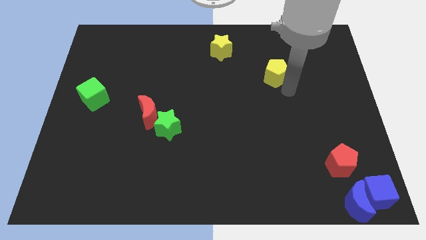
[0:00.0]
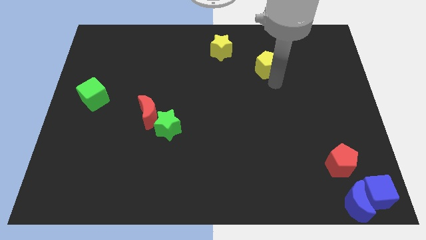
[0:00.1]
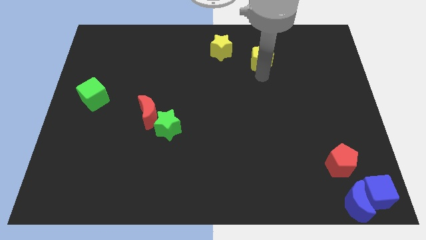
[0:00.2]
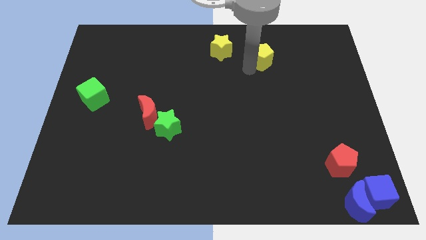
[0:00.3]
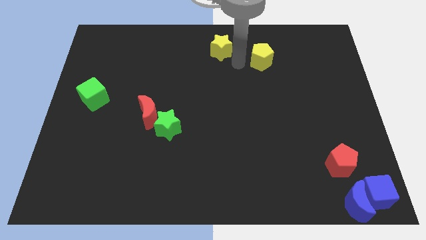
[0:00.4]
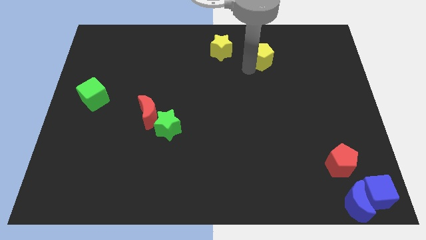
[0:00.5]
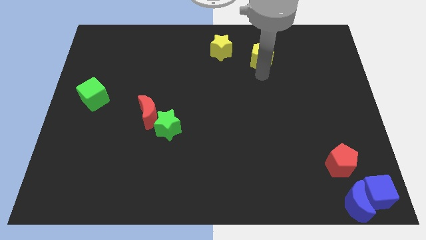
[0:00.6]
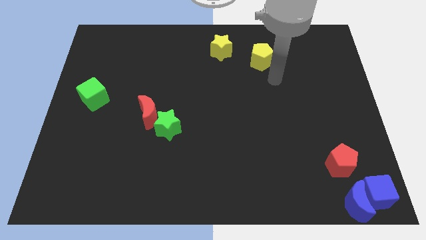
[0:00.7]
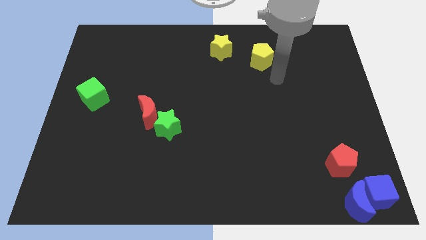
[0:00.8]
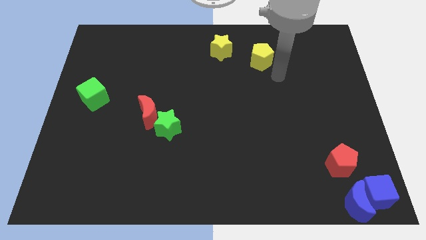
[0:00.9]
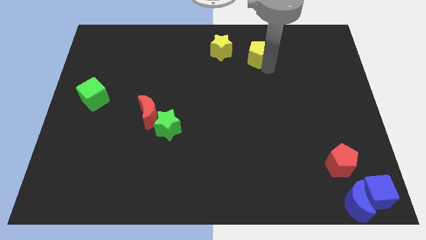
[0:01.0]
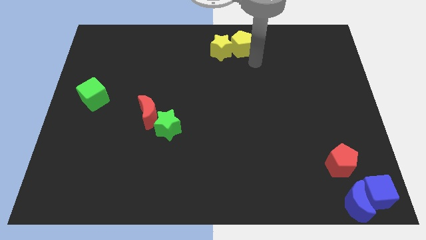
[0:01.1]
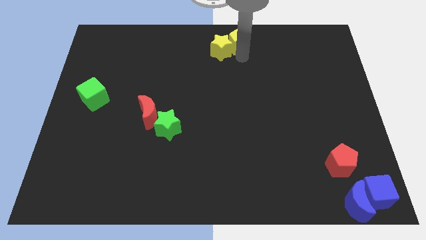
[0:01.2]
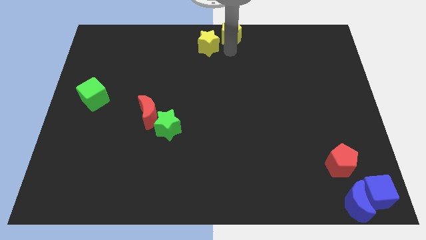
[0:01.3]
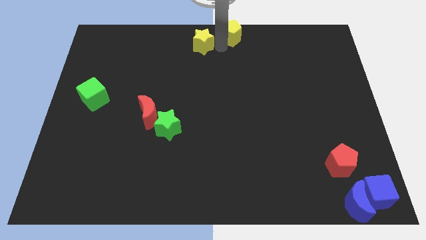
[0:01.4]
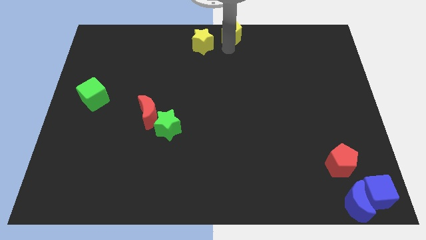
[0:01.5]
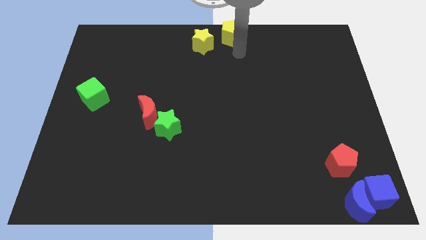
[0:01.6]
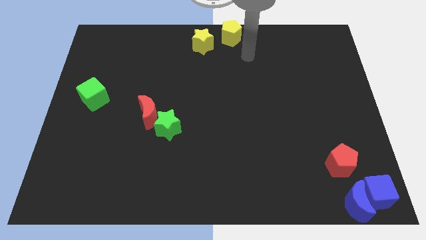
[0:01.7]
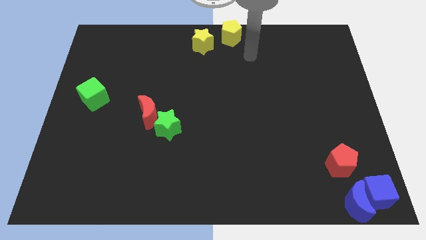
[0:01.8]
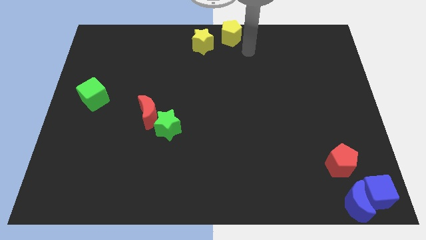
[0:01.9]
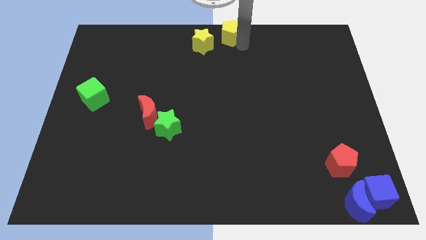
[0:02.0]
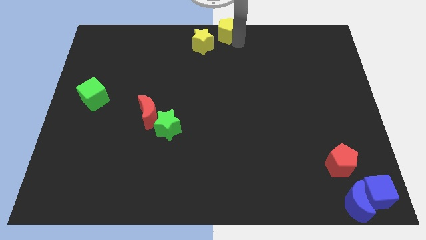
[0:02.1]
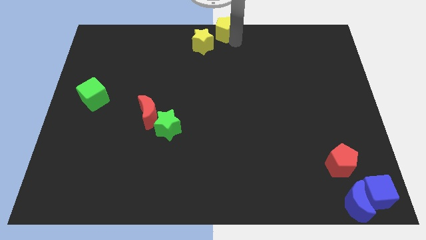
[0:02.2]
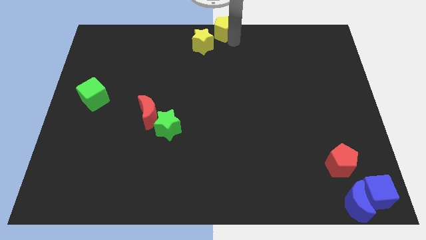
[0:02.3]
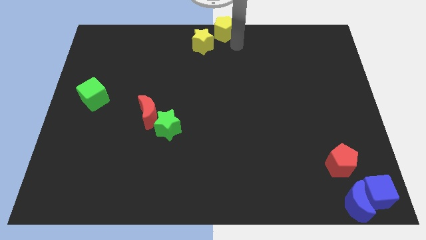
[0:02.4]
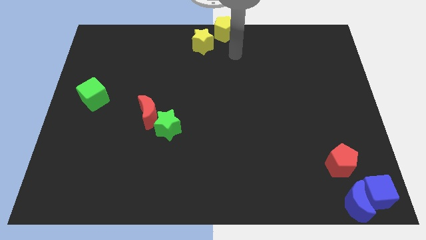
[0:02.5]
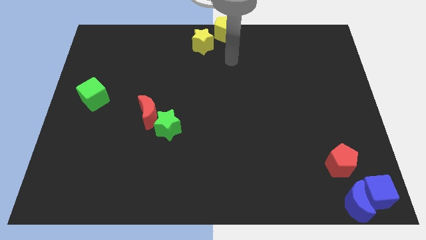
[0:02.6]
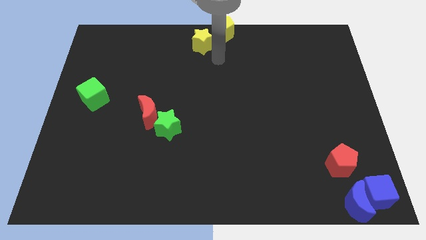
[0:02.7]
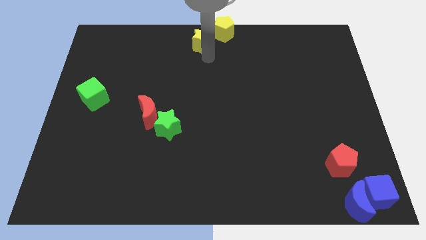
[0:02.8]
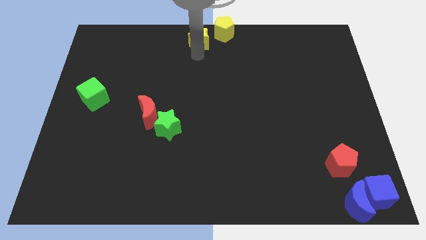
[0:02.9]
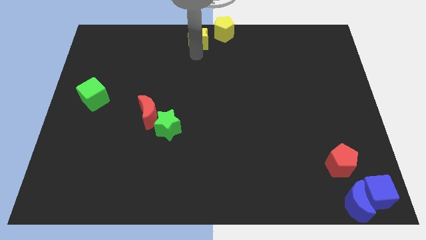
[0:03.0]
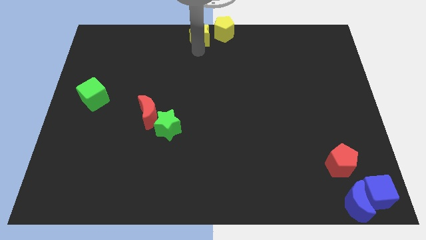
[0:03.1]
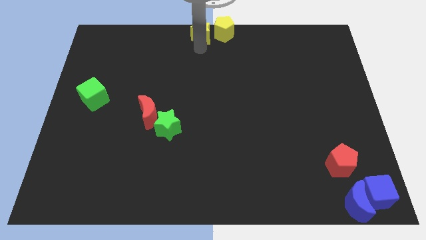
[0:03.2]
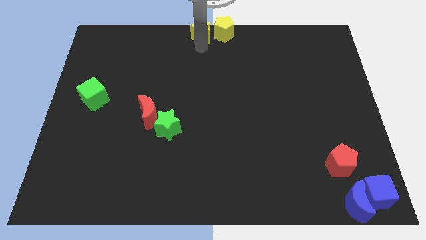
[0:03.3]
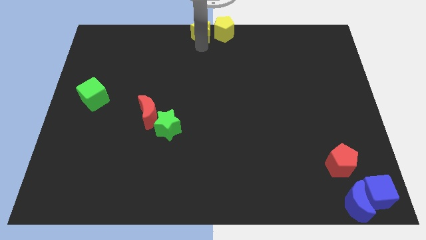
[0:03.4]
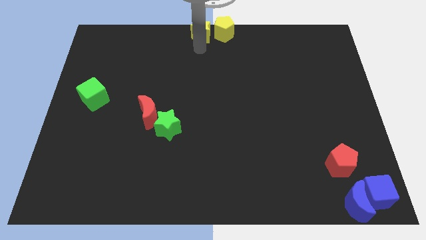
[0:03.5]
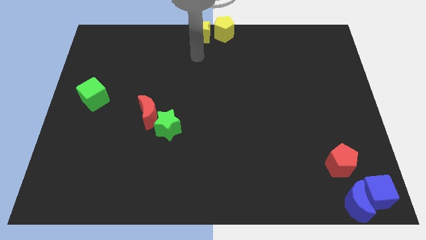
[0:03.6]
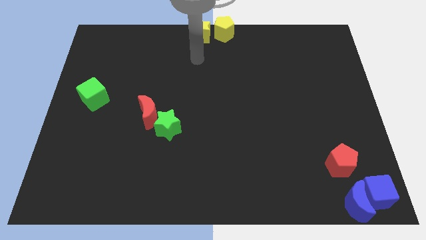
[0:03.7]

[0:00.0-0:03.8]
place the yellow blocks diagonal to green star

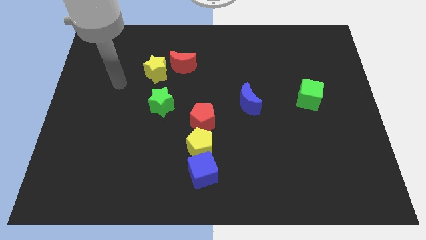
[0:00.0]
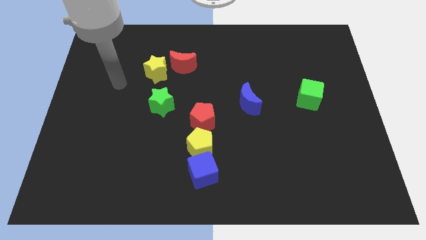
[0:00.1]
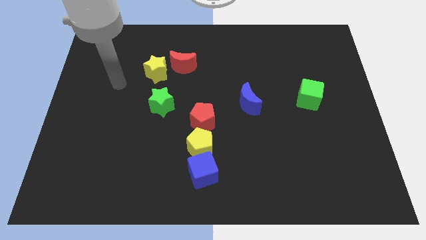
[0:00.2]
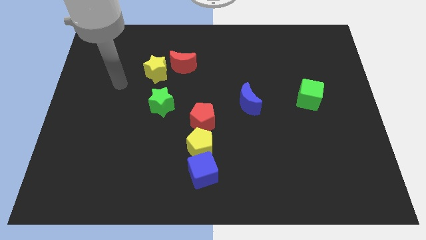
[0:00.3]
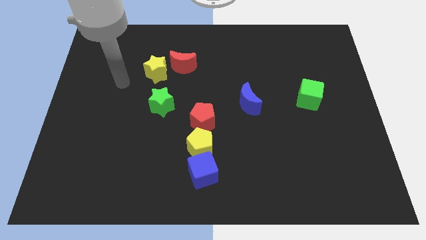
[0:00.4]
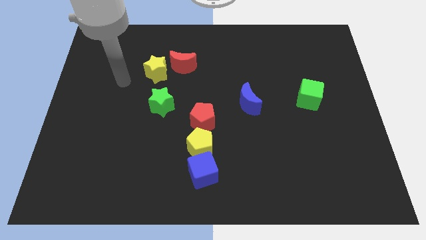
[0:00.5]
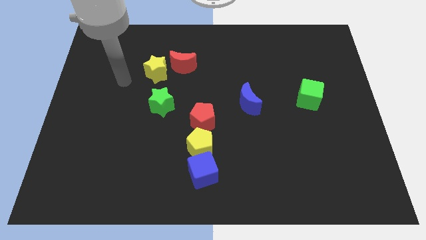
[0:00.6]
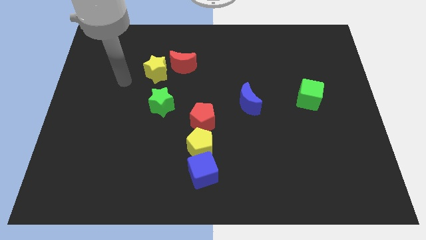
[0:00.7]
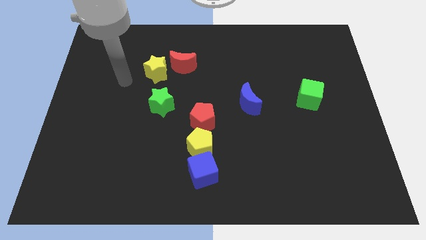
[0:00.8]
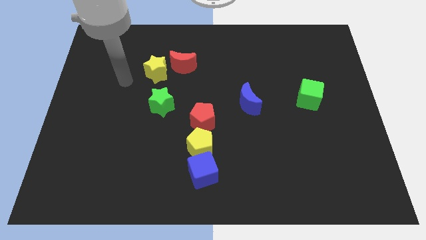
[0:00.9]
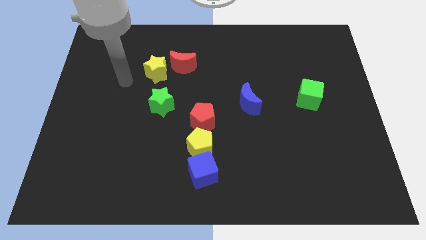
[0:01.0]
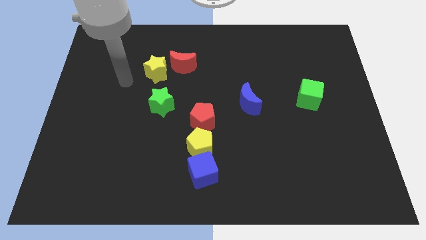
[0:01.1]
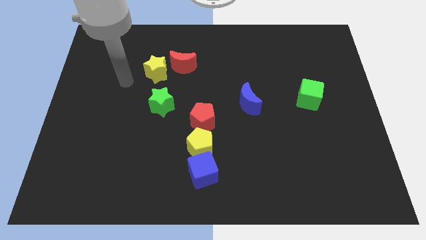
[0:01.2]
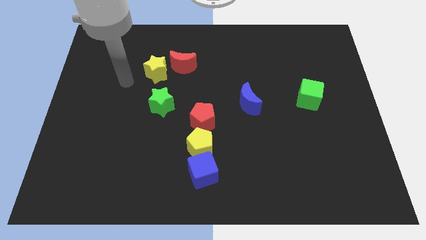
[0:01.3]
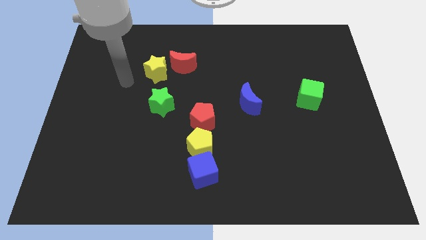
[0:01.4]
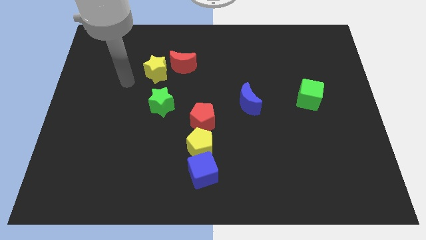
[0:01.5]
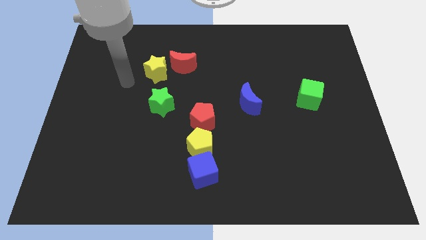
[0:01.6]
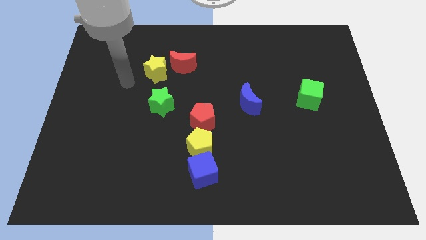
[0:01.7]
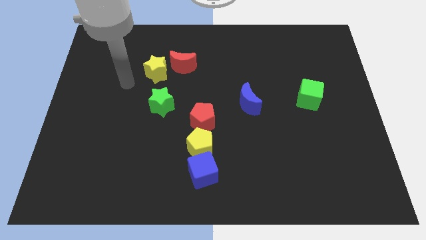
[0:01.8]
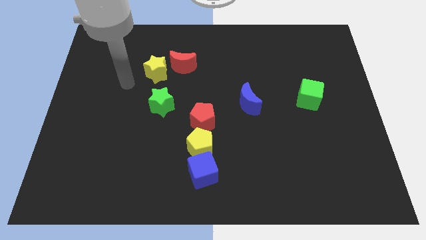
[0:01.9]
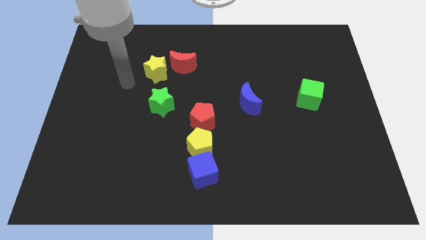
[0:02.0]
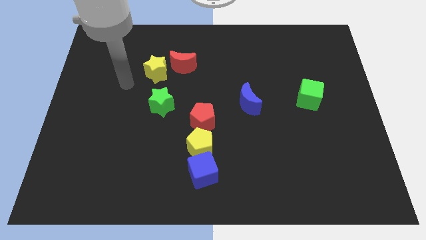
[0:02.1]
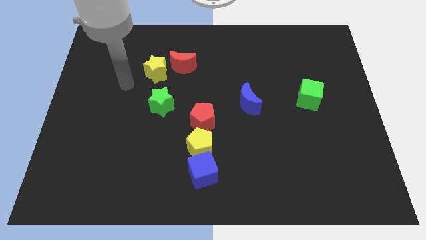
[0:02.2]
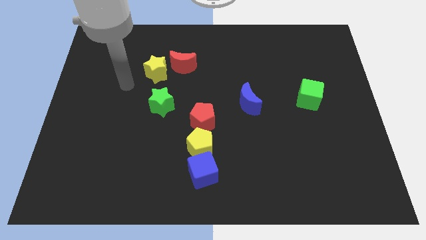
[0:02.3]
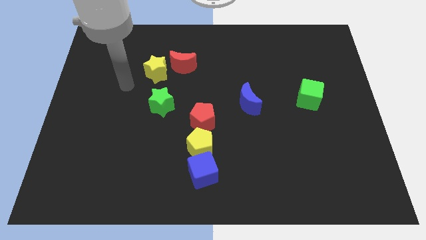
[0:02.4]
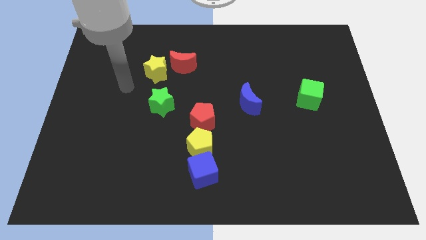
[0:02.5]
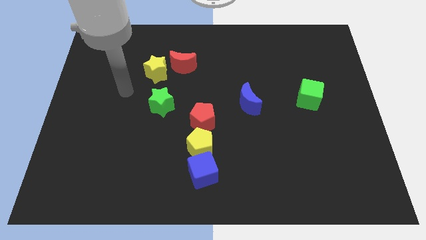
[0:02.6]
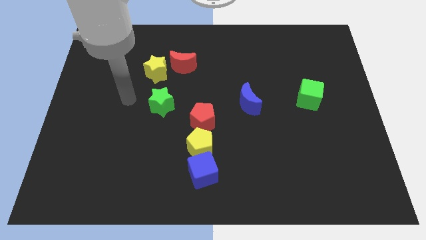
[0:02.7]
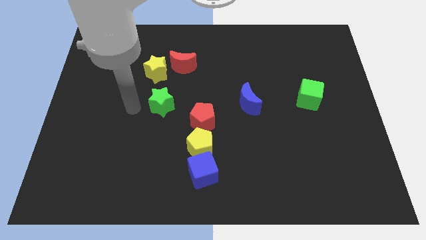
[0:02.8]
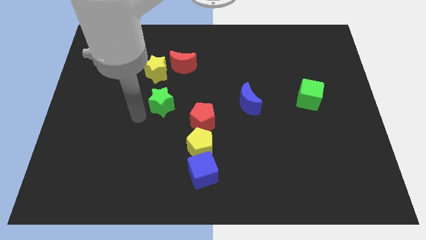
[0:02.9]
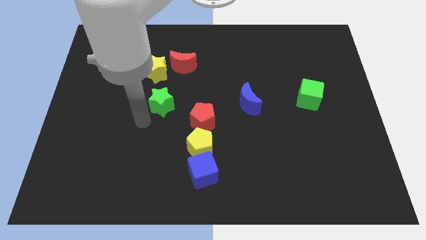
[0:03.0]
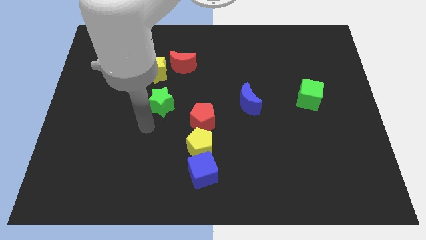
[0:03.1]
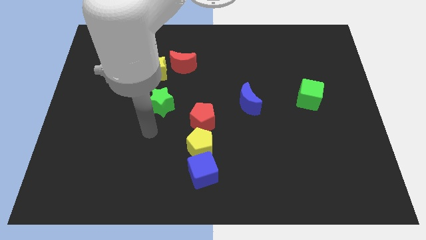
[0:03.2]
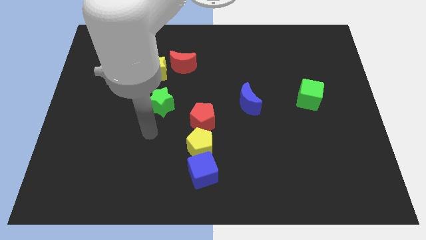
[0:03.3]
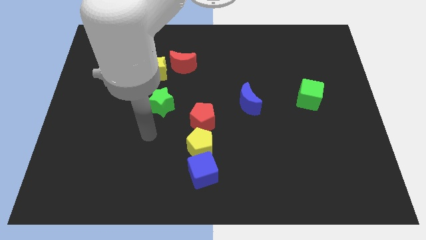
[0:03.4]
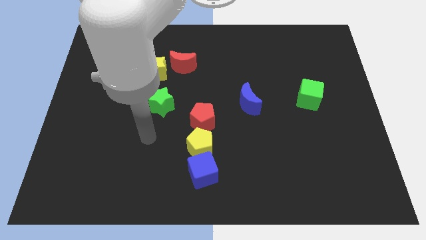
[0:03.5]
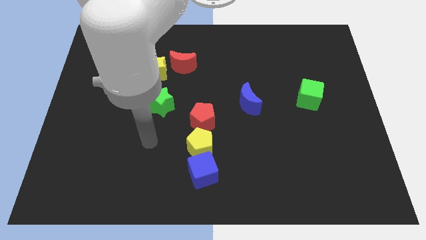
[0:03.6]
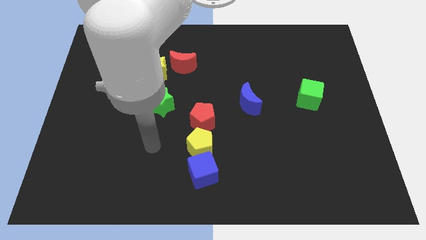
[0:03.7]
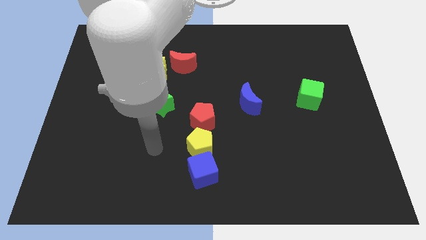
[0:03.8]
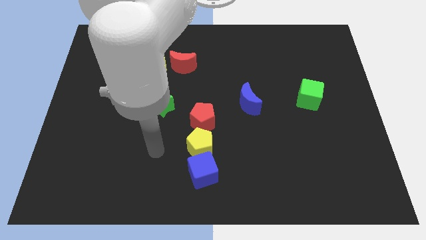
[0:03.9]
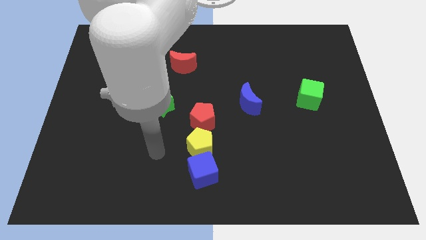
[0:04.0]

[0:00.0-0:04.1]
move your arm down and to the right

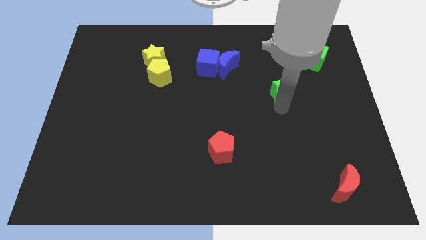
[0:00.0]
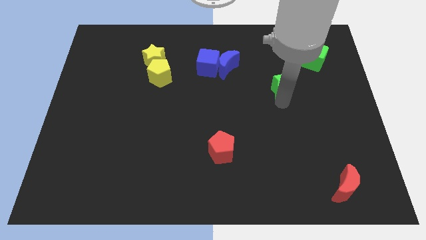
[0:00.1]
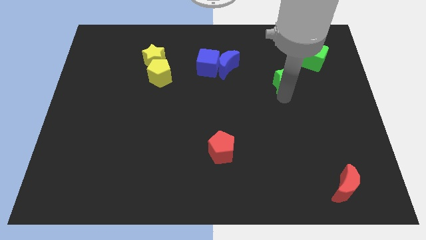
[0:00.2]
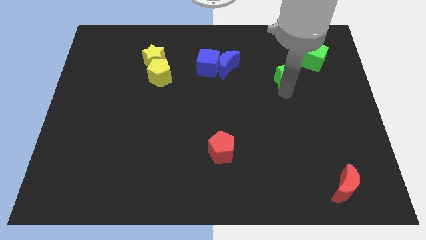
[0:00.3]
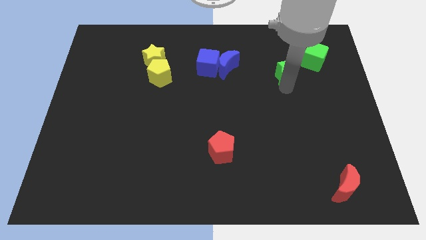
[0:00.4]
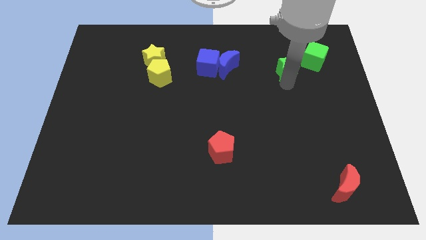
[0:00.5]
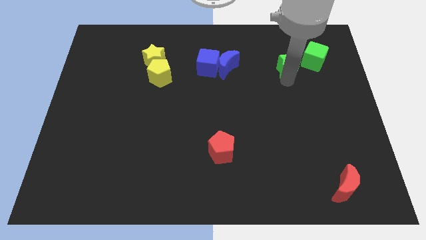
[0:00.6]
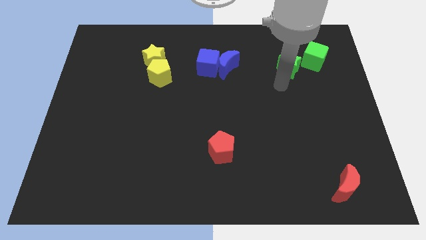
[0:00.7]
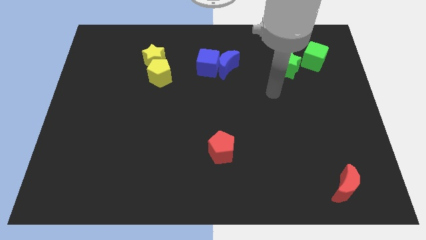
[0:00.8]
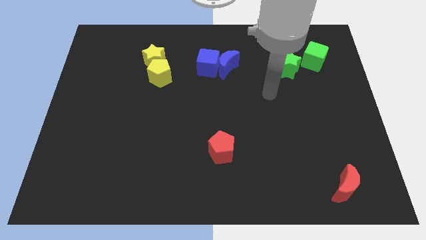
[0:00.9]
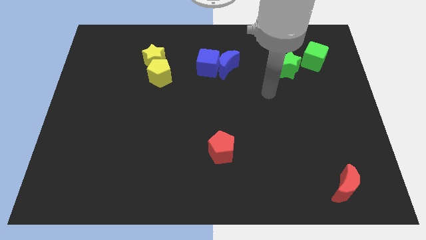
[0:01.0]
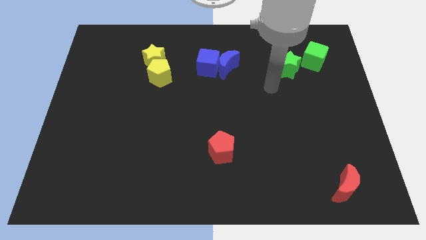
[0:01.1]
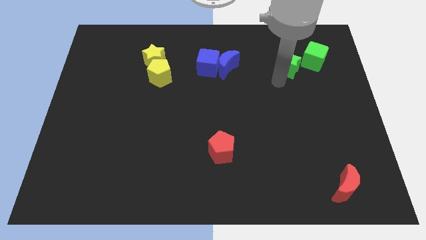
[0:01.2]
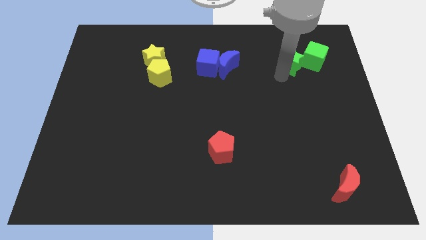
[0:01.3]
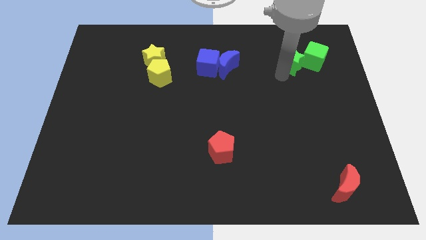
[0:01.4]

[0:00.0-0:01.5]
push the green star to the left of the green cube
